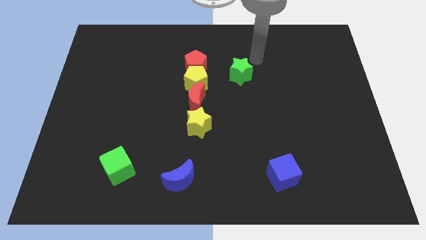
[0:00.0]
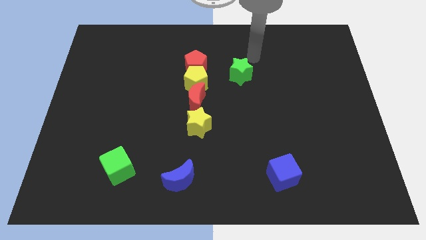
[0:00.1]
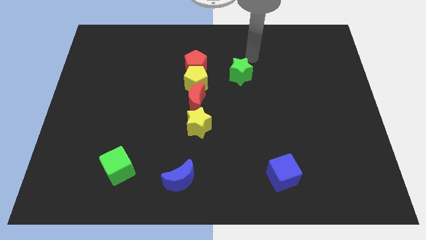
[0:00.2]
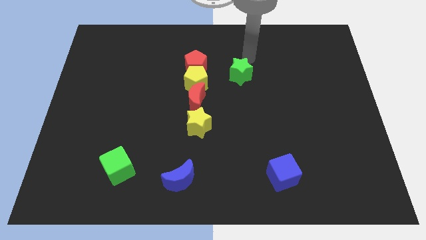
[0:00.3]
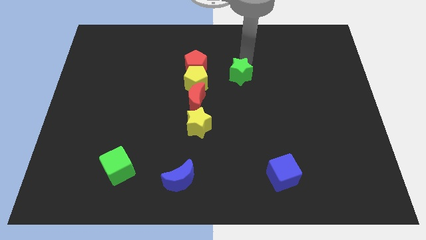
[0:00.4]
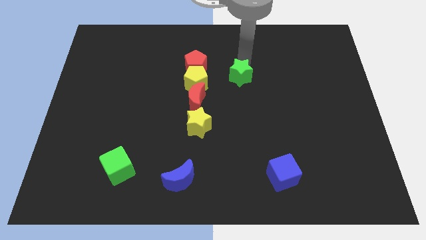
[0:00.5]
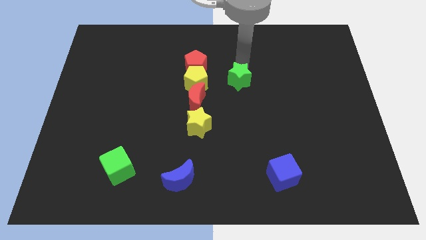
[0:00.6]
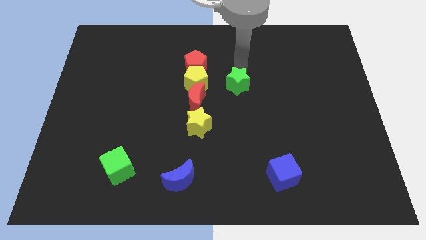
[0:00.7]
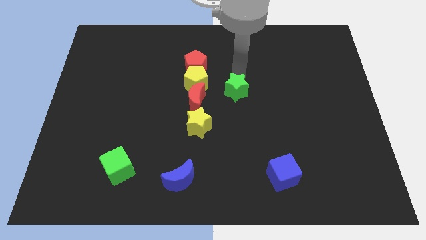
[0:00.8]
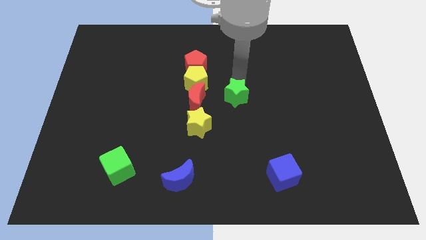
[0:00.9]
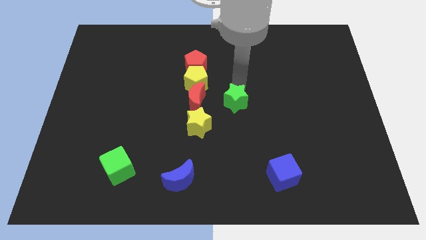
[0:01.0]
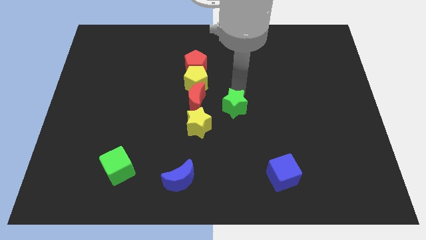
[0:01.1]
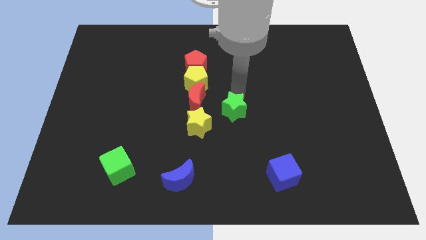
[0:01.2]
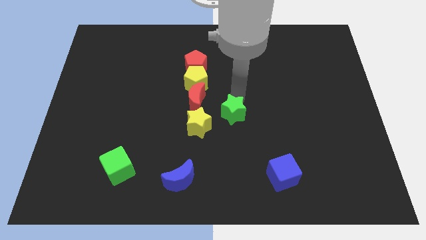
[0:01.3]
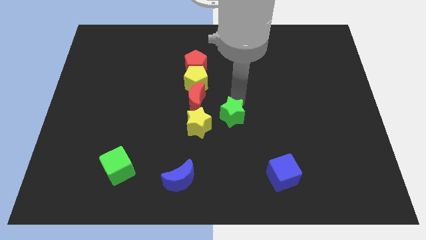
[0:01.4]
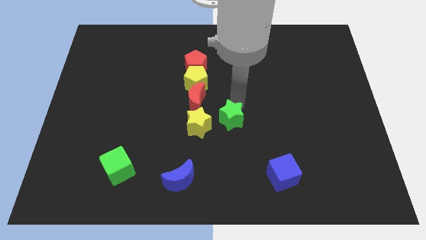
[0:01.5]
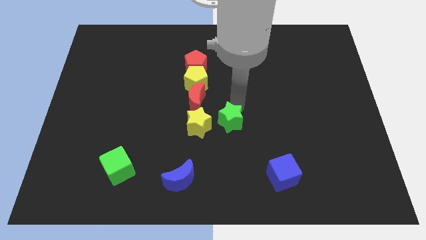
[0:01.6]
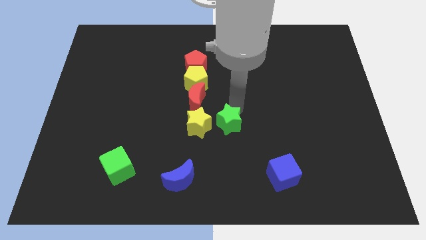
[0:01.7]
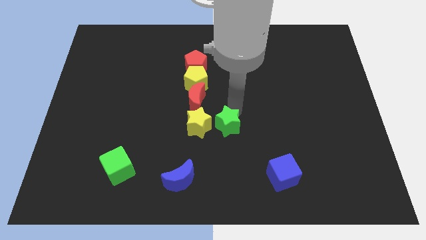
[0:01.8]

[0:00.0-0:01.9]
move the green star to the right of the yellow star

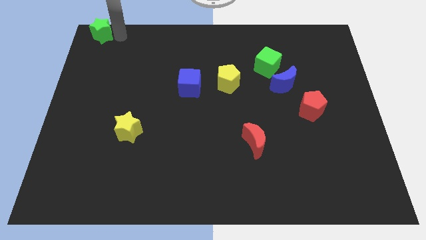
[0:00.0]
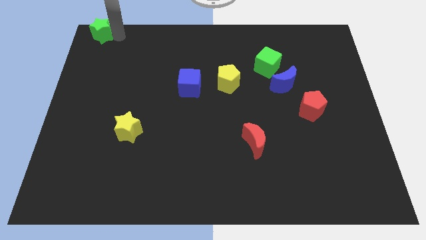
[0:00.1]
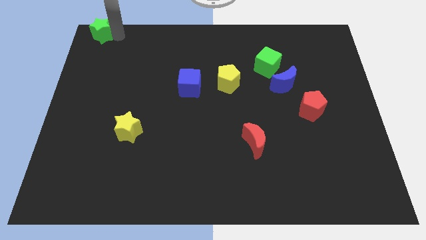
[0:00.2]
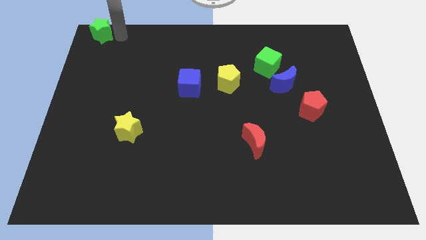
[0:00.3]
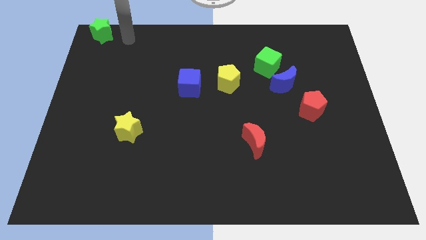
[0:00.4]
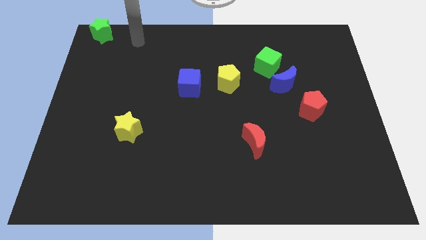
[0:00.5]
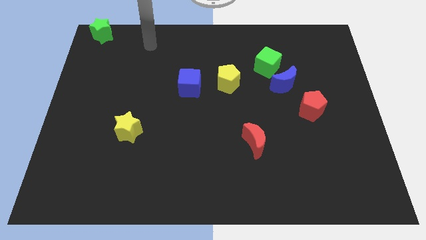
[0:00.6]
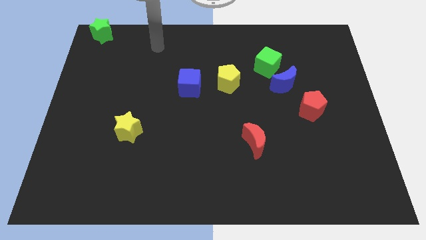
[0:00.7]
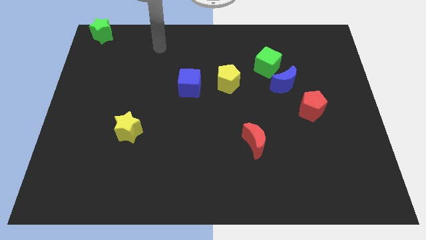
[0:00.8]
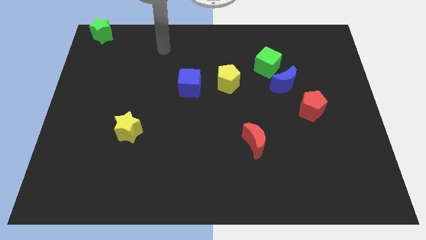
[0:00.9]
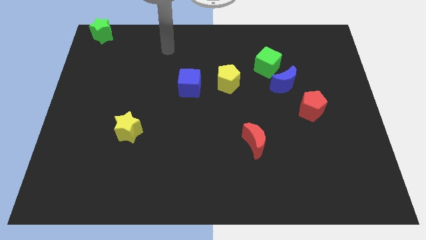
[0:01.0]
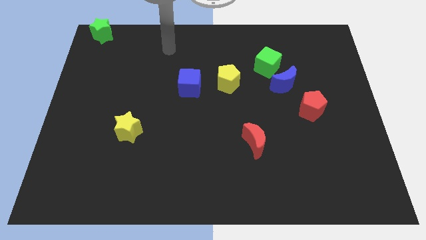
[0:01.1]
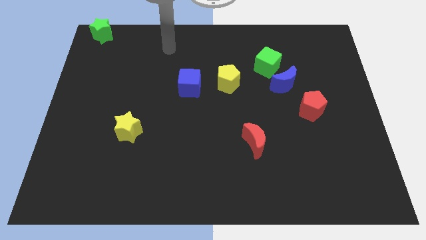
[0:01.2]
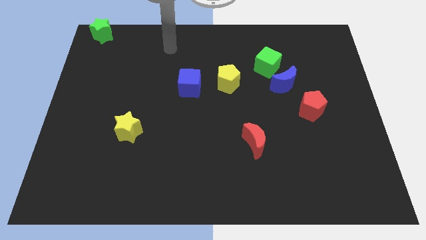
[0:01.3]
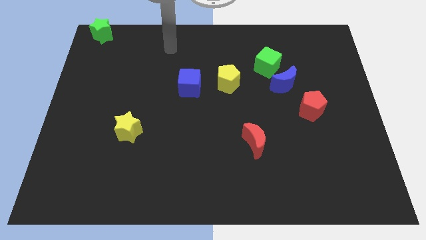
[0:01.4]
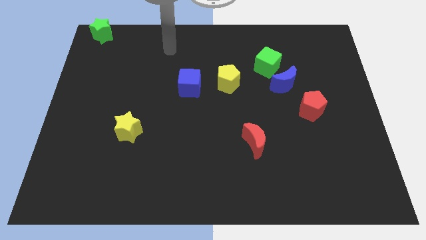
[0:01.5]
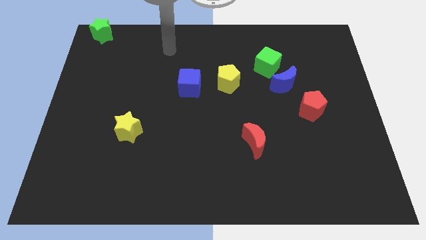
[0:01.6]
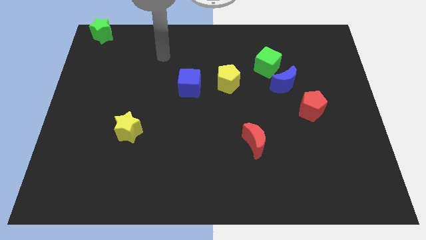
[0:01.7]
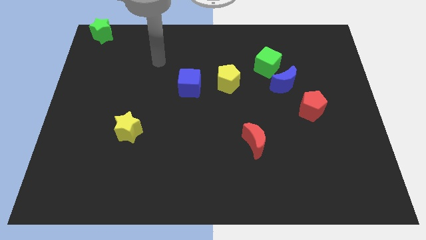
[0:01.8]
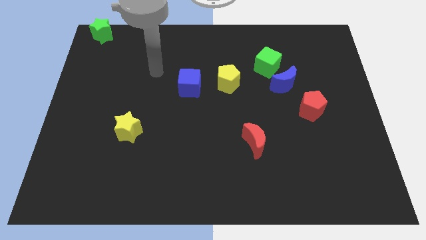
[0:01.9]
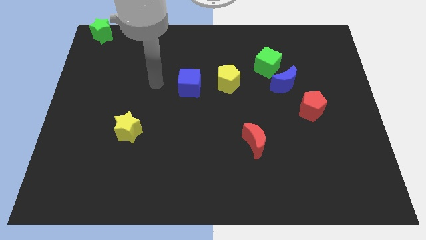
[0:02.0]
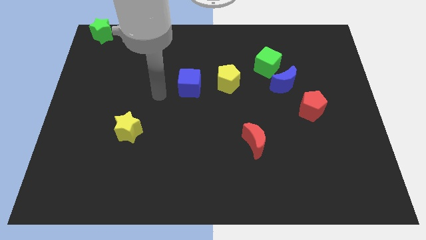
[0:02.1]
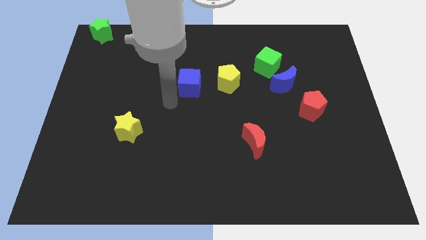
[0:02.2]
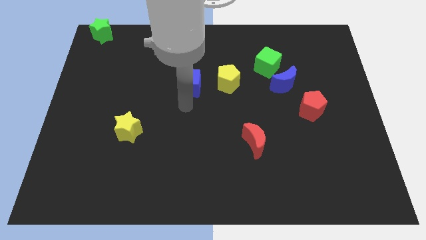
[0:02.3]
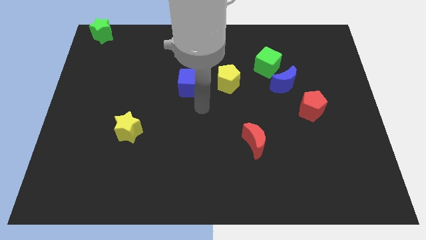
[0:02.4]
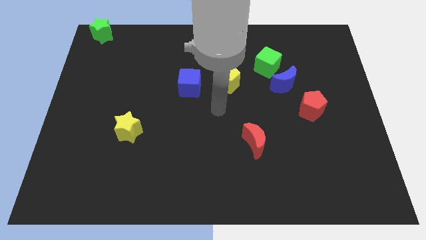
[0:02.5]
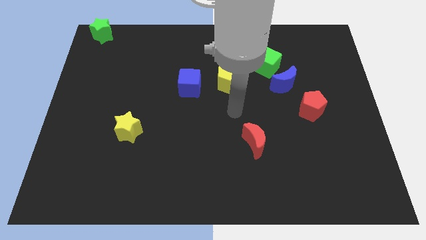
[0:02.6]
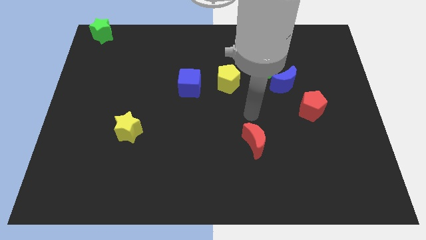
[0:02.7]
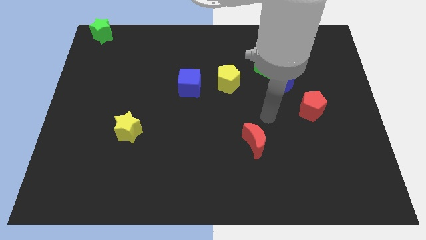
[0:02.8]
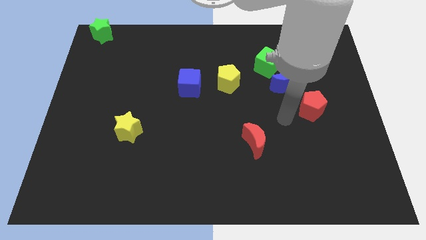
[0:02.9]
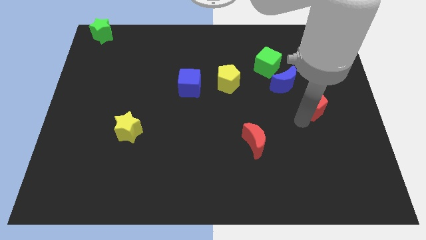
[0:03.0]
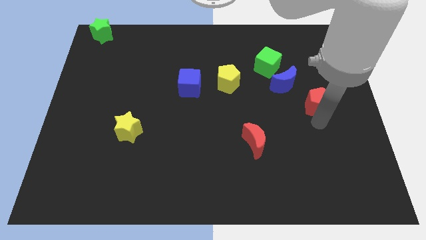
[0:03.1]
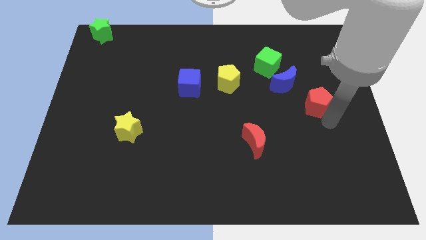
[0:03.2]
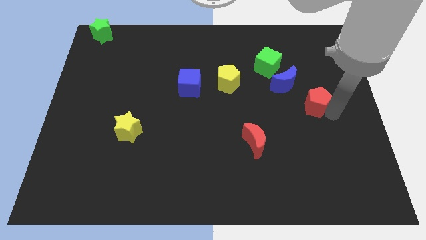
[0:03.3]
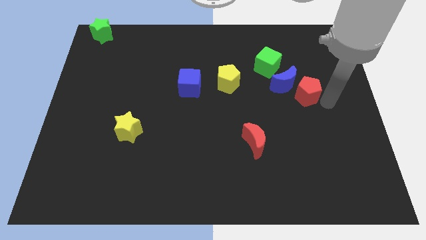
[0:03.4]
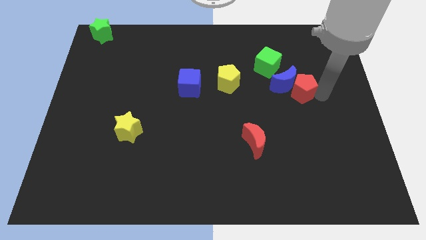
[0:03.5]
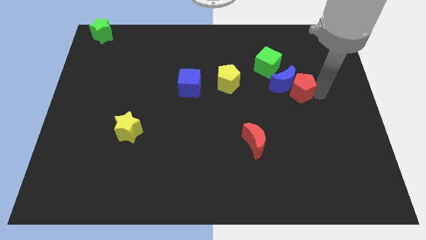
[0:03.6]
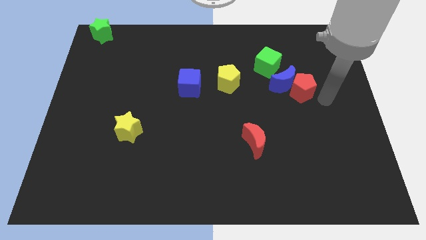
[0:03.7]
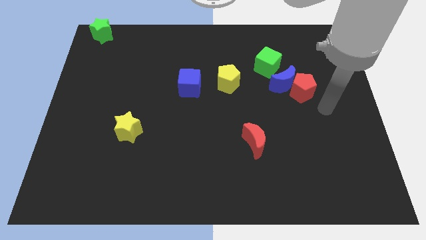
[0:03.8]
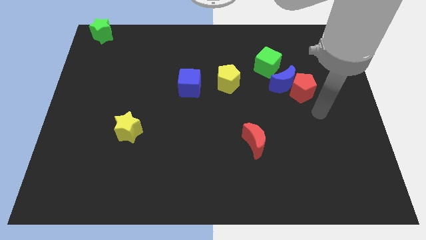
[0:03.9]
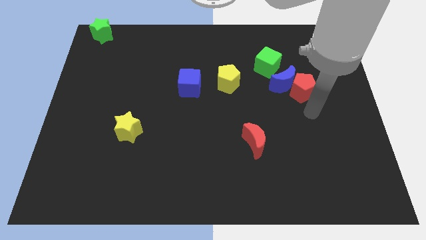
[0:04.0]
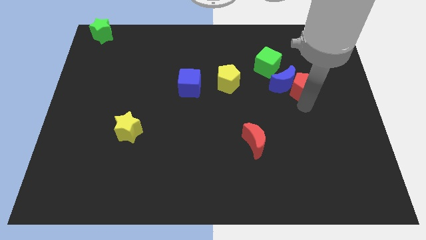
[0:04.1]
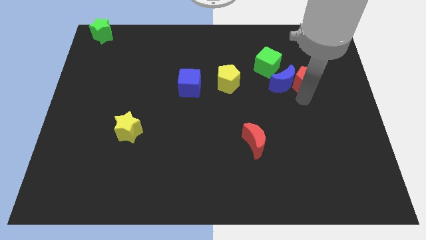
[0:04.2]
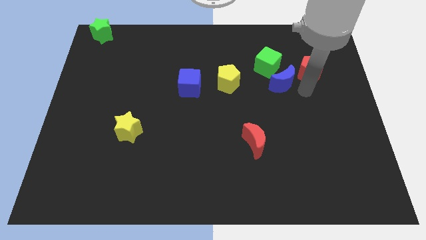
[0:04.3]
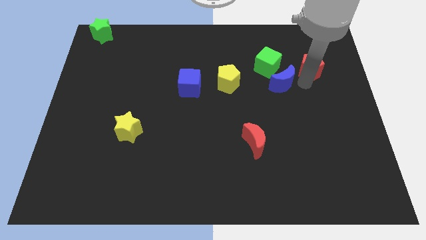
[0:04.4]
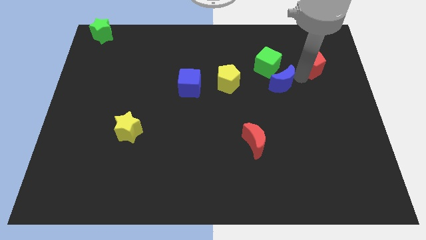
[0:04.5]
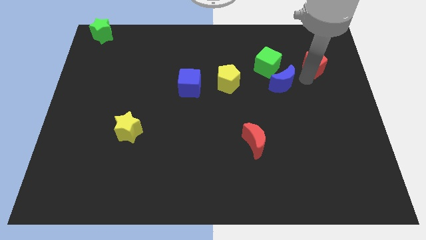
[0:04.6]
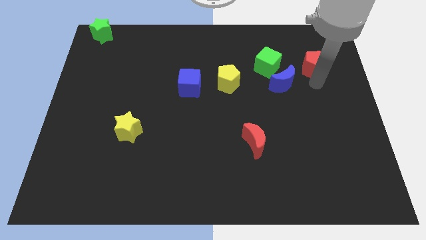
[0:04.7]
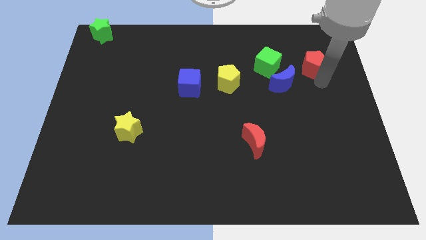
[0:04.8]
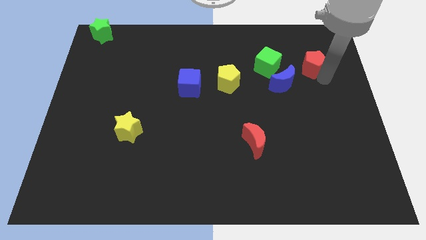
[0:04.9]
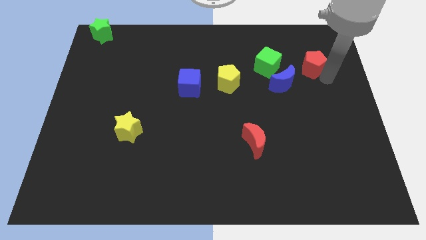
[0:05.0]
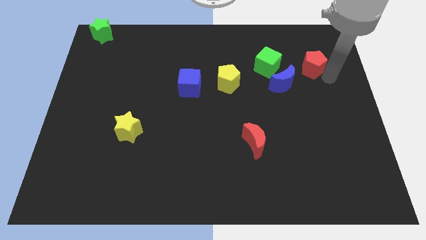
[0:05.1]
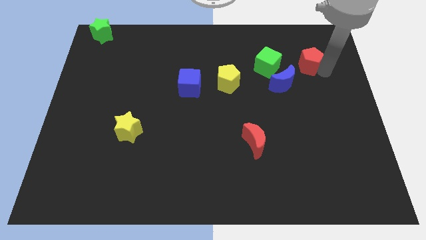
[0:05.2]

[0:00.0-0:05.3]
push the red pentagon towards the top side of the board

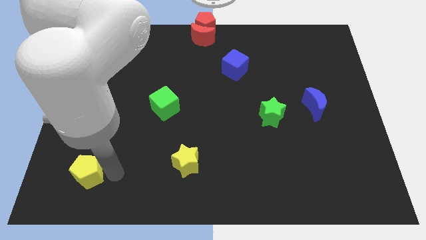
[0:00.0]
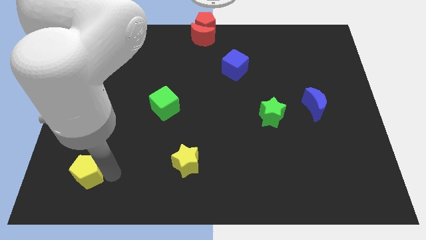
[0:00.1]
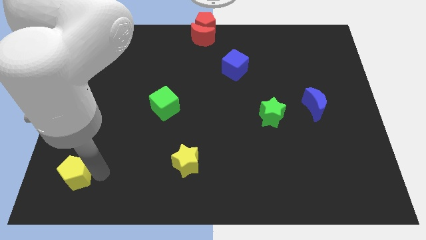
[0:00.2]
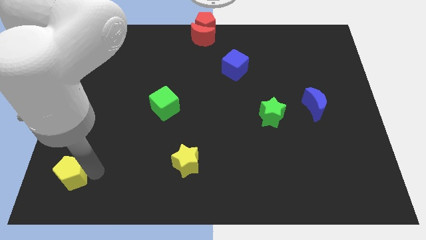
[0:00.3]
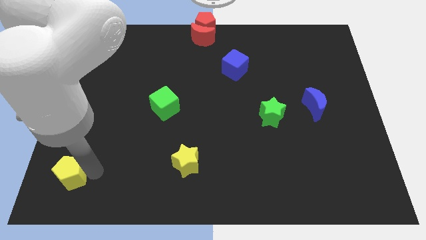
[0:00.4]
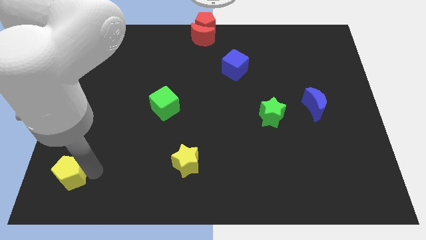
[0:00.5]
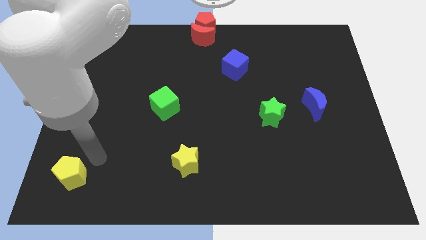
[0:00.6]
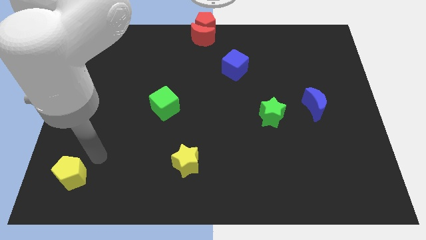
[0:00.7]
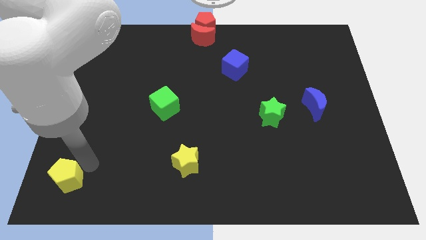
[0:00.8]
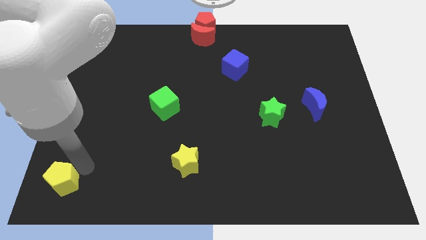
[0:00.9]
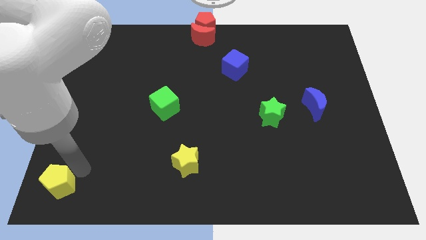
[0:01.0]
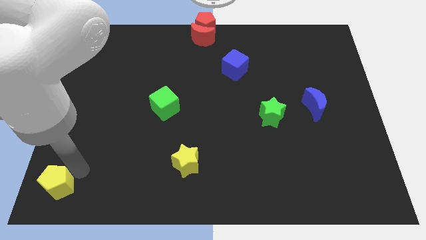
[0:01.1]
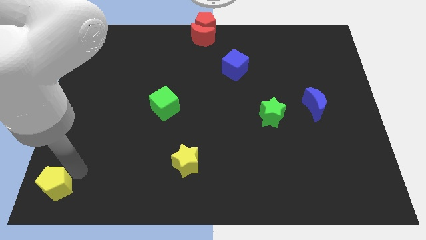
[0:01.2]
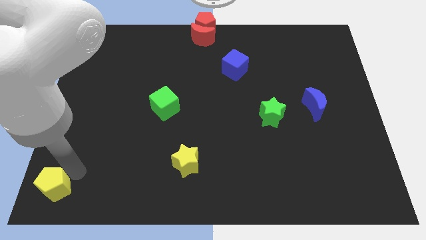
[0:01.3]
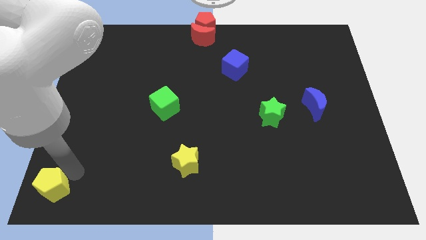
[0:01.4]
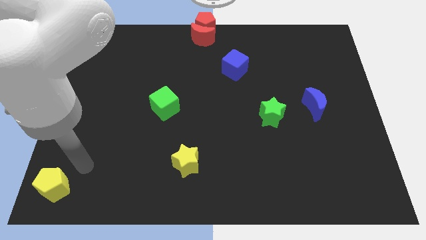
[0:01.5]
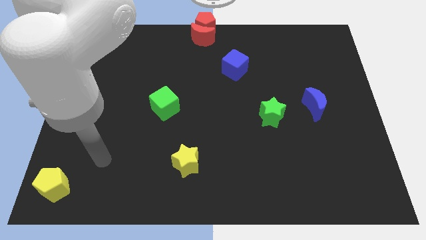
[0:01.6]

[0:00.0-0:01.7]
push yellow pentagon to the bottom left corner
